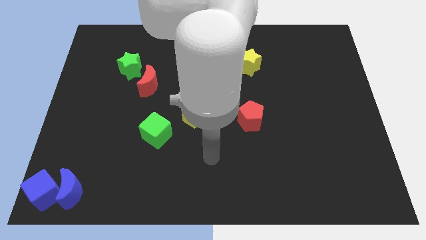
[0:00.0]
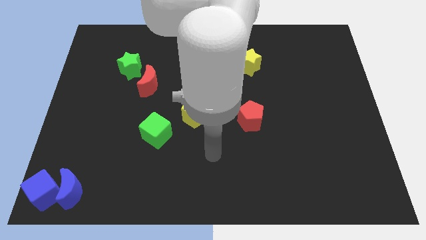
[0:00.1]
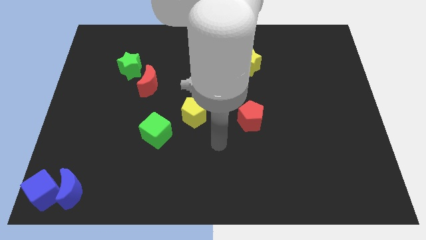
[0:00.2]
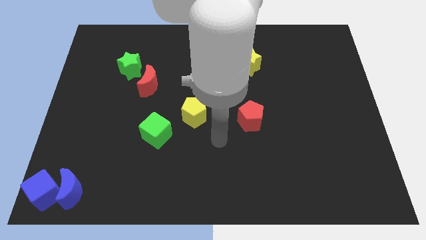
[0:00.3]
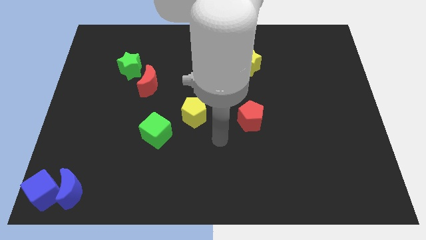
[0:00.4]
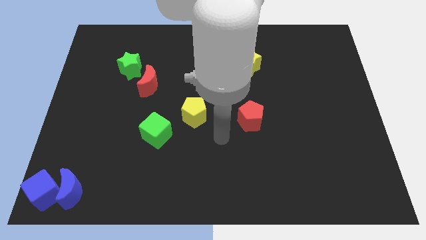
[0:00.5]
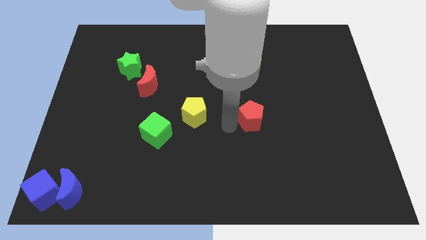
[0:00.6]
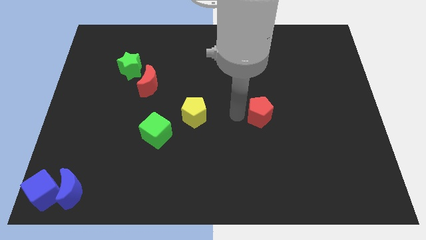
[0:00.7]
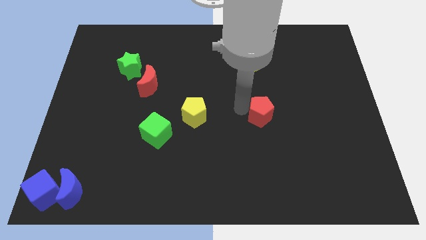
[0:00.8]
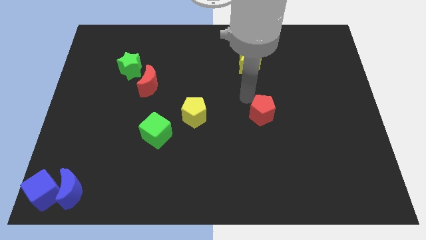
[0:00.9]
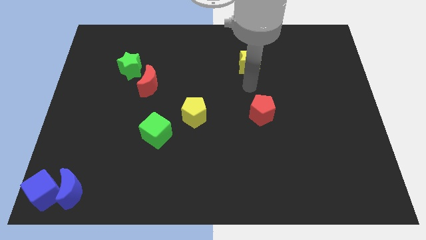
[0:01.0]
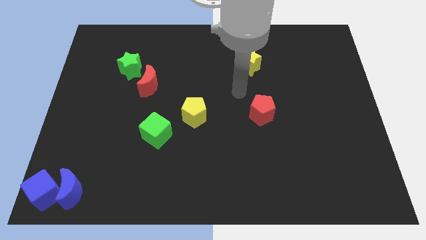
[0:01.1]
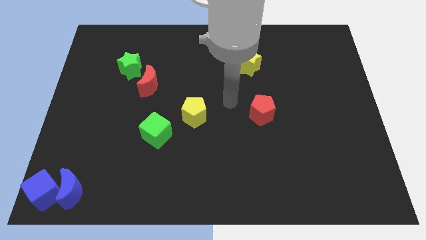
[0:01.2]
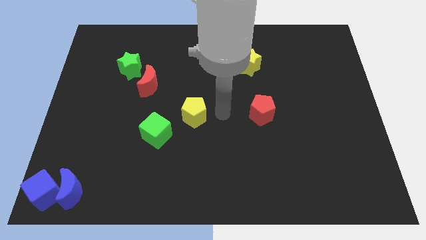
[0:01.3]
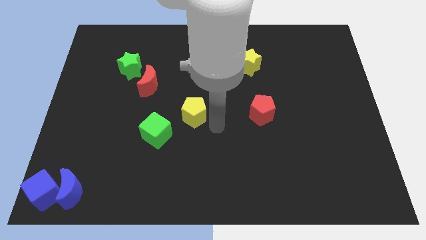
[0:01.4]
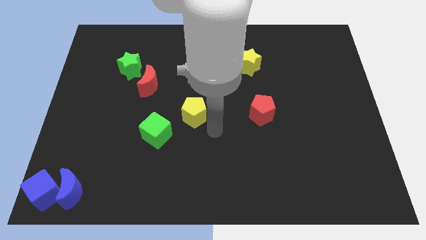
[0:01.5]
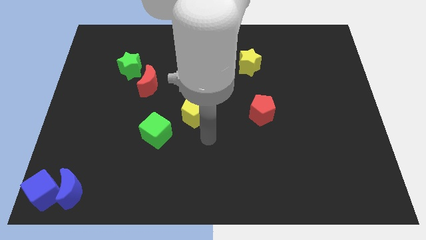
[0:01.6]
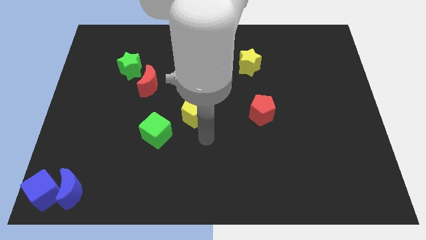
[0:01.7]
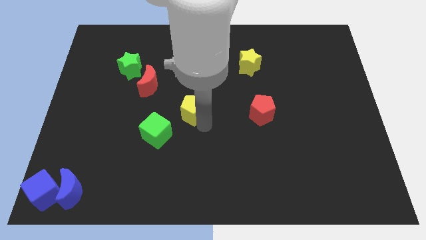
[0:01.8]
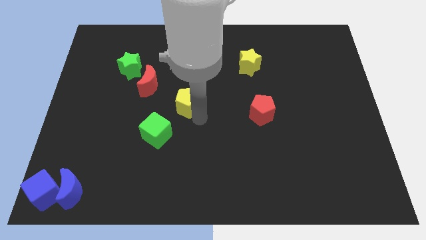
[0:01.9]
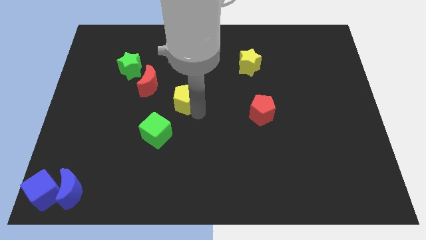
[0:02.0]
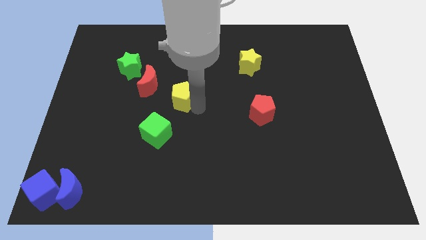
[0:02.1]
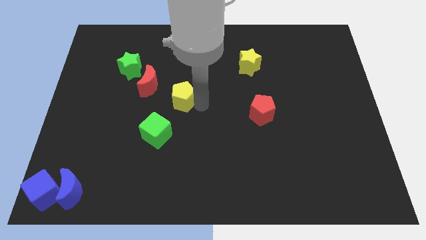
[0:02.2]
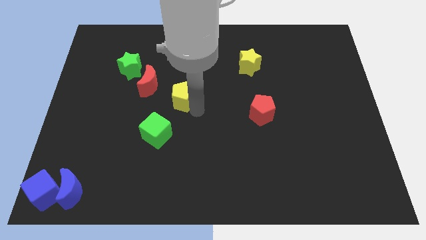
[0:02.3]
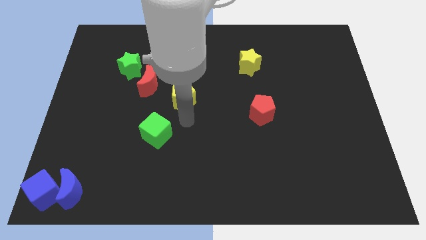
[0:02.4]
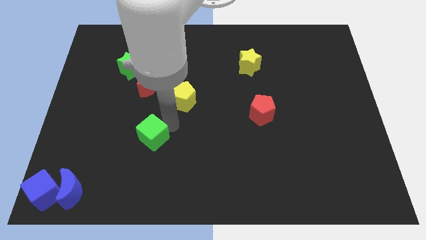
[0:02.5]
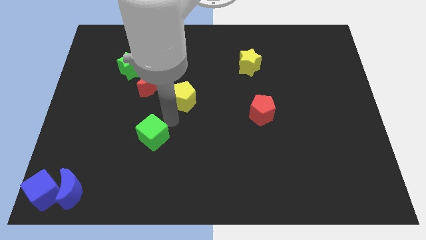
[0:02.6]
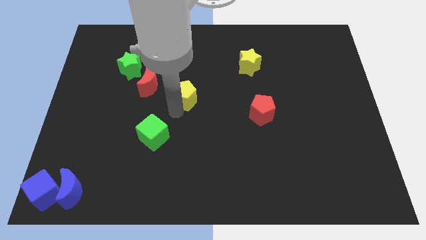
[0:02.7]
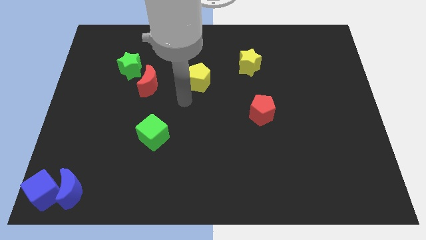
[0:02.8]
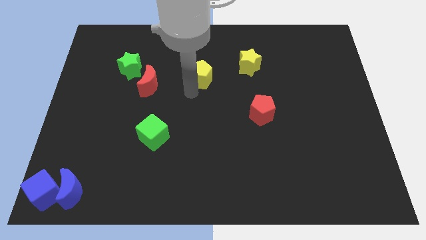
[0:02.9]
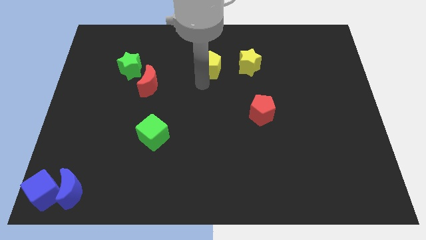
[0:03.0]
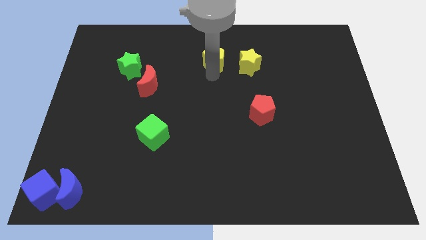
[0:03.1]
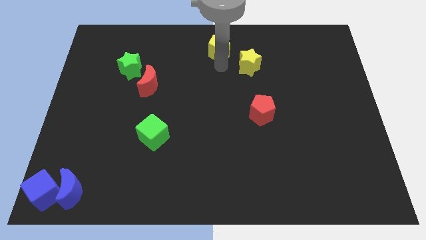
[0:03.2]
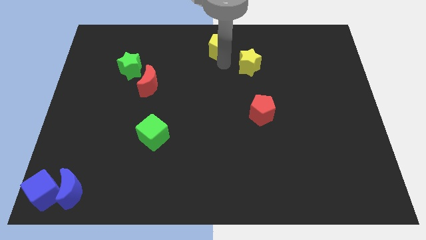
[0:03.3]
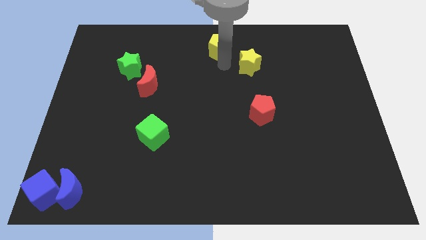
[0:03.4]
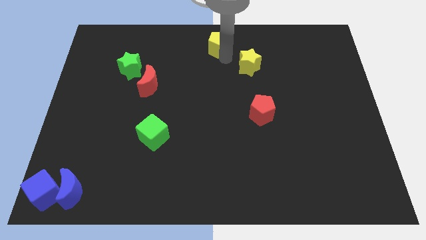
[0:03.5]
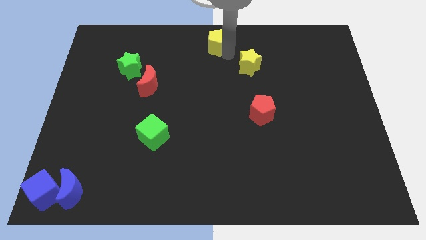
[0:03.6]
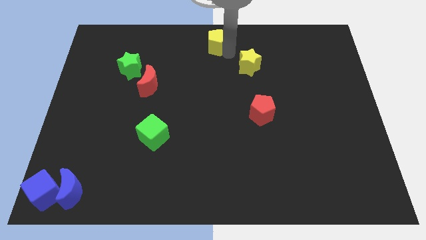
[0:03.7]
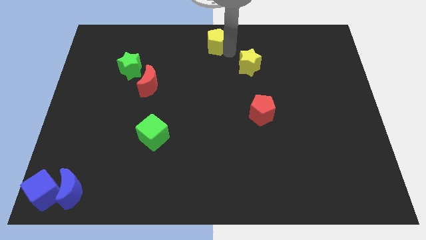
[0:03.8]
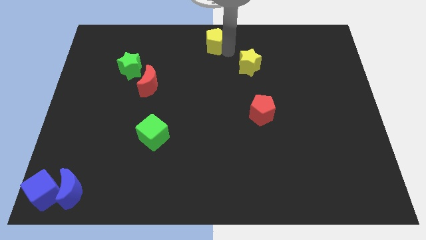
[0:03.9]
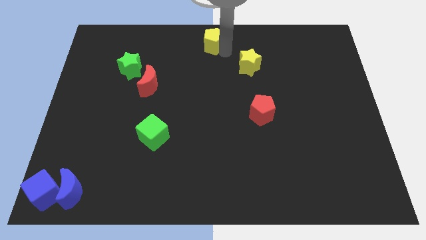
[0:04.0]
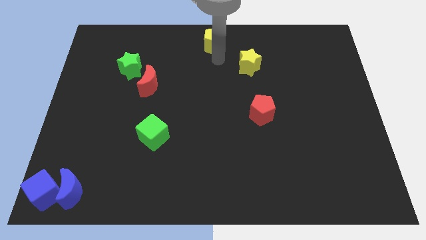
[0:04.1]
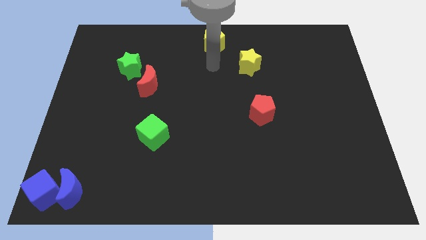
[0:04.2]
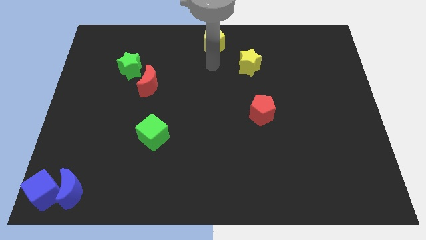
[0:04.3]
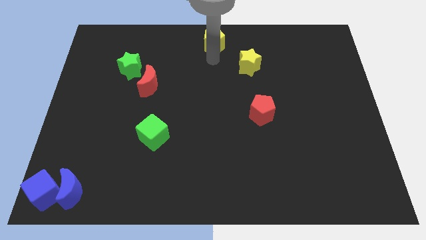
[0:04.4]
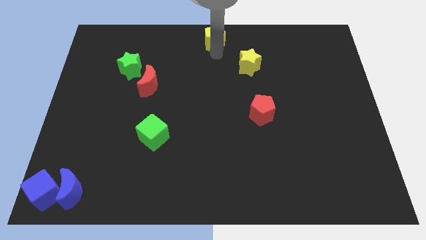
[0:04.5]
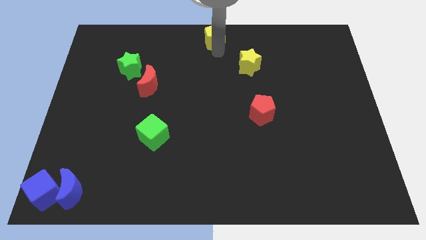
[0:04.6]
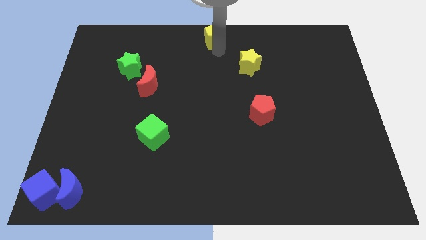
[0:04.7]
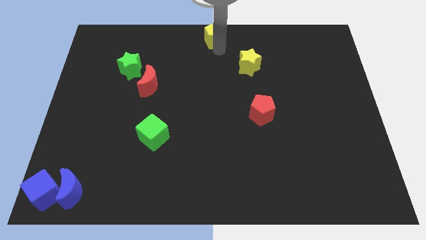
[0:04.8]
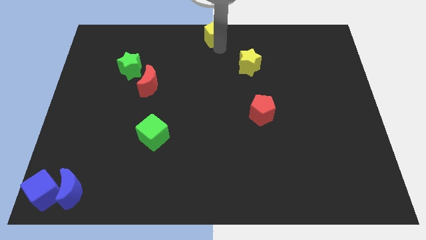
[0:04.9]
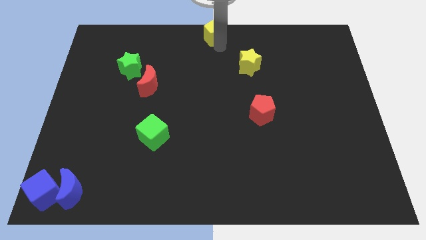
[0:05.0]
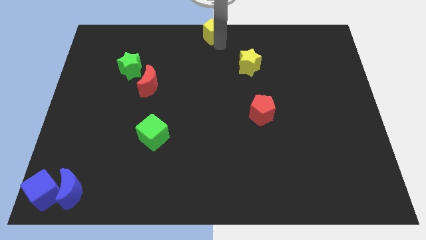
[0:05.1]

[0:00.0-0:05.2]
place the yellow pentagon at the top center of the board

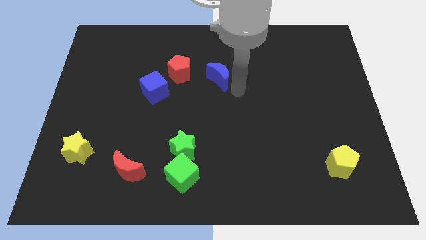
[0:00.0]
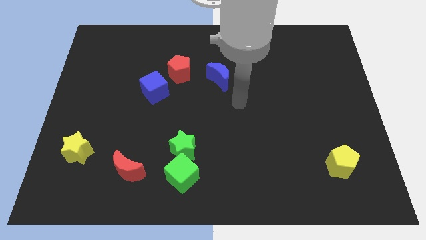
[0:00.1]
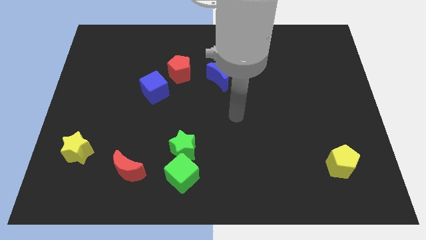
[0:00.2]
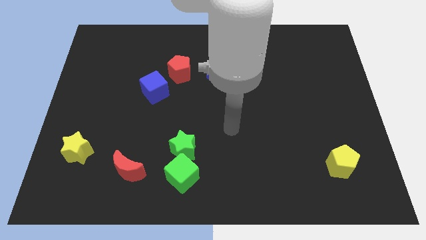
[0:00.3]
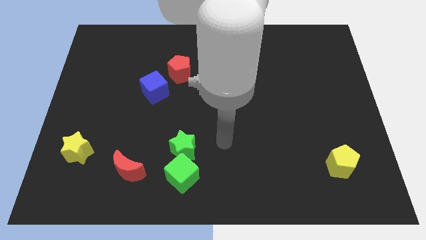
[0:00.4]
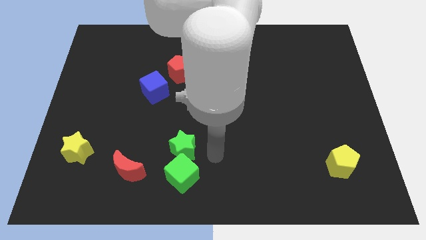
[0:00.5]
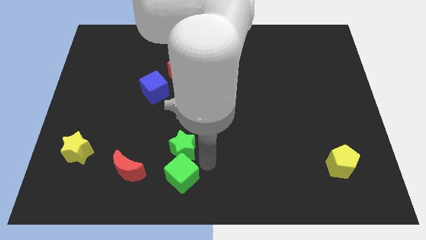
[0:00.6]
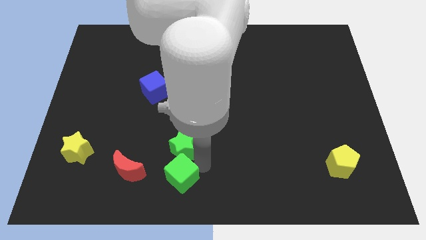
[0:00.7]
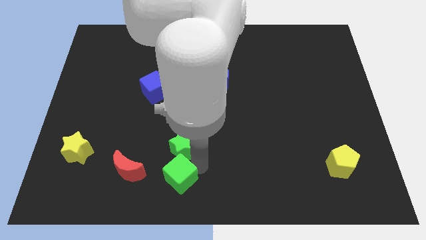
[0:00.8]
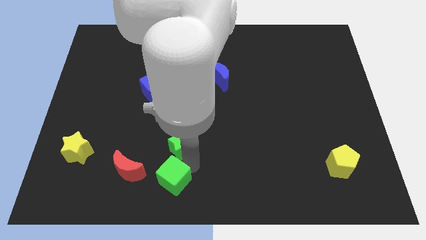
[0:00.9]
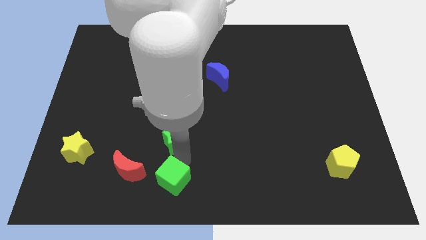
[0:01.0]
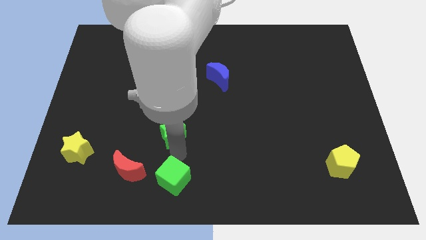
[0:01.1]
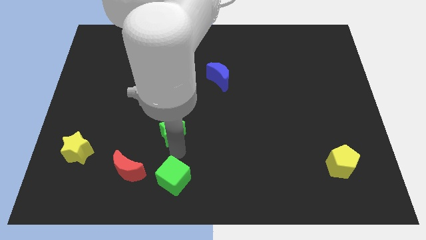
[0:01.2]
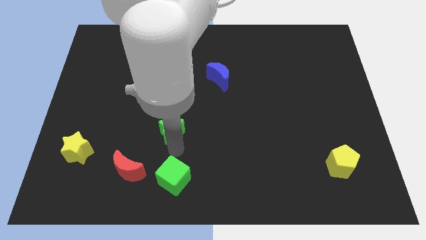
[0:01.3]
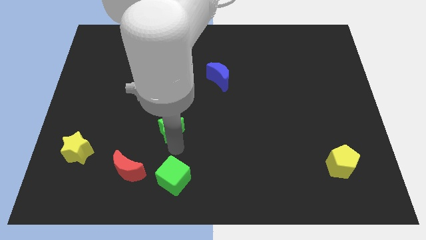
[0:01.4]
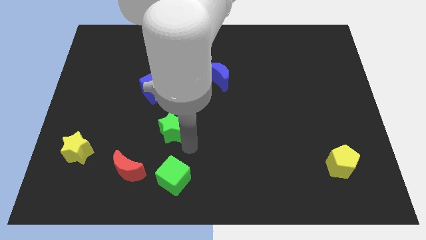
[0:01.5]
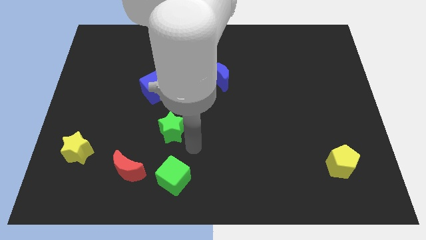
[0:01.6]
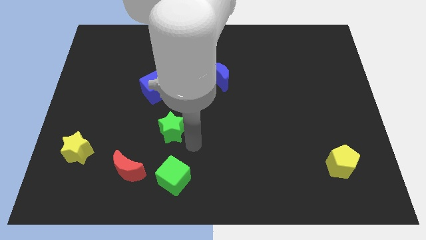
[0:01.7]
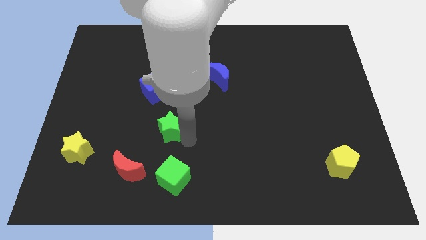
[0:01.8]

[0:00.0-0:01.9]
separate green star from the green cube

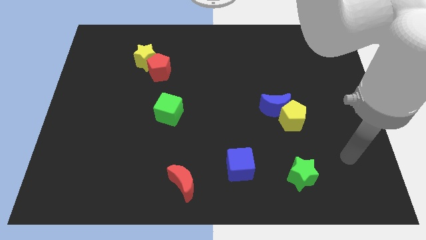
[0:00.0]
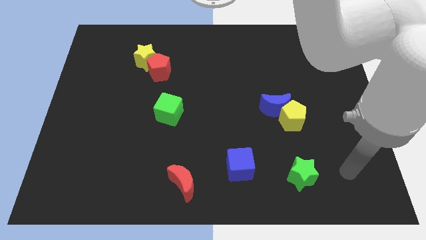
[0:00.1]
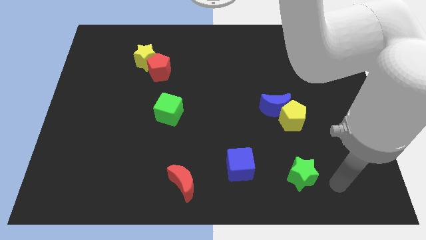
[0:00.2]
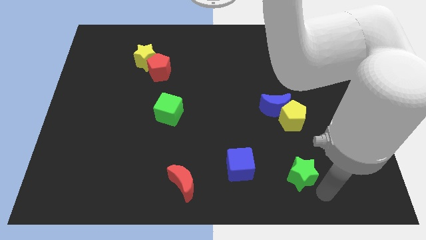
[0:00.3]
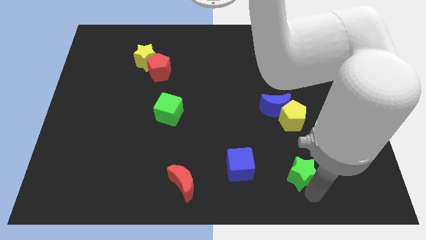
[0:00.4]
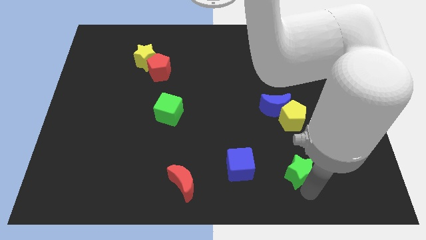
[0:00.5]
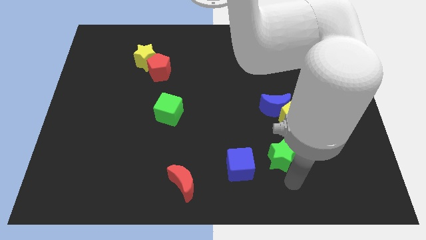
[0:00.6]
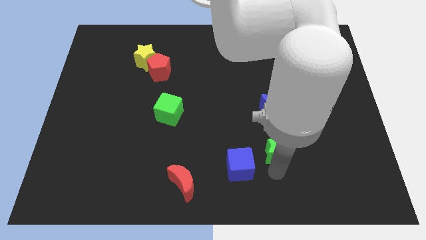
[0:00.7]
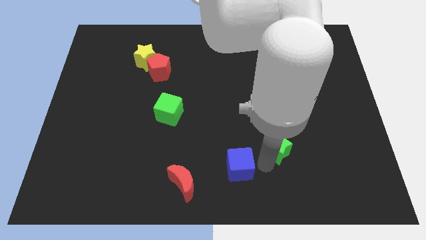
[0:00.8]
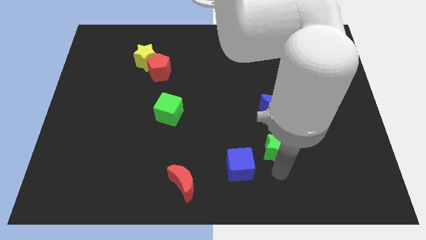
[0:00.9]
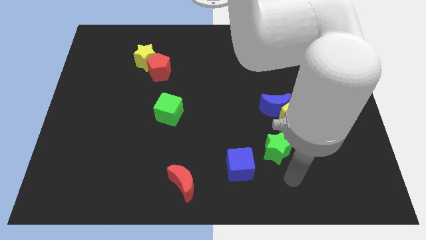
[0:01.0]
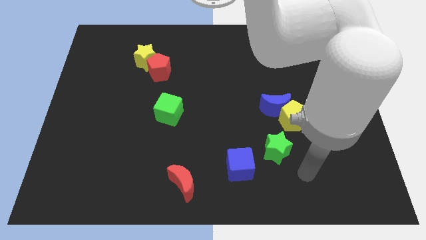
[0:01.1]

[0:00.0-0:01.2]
slide the green star diagonally top right to the blue cube

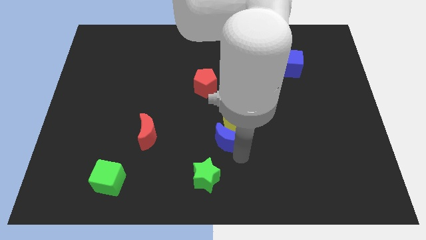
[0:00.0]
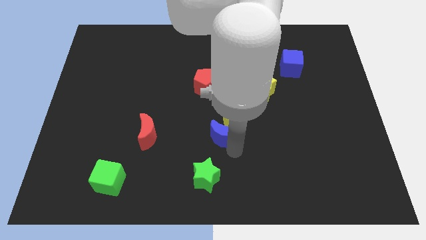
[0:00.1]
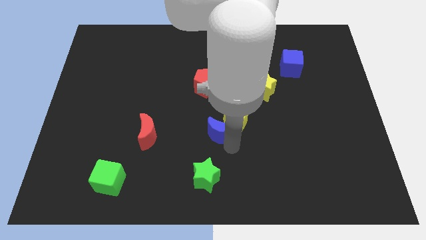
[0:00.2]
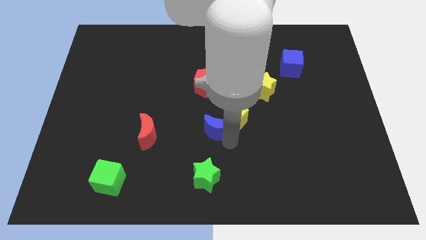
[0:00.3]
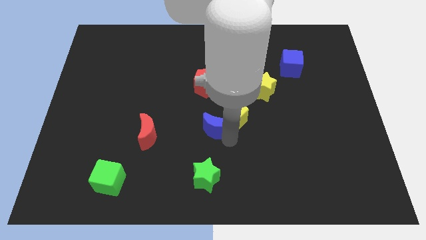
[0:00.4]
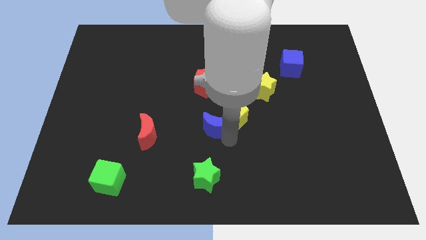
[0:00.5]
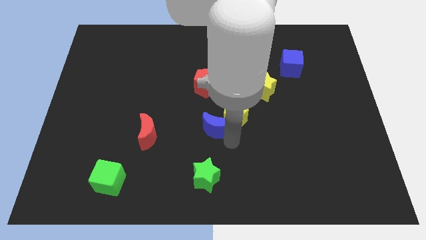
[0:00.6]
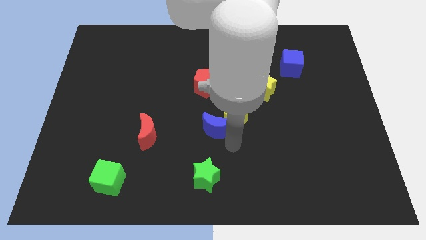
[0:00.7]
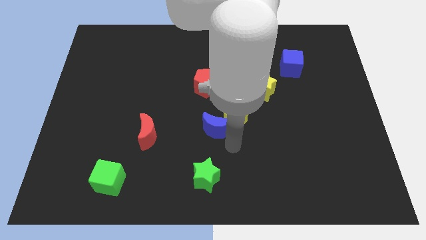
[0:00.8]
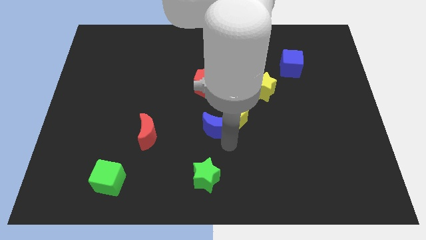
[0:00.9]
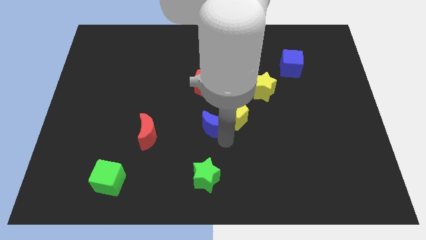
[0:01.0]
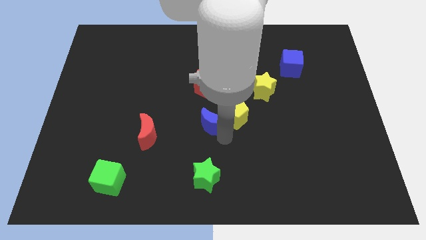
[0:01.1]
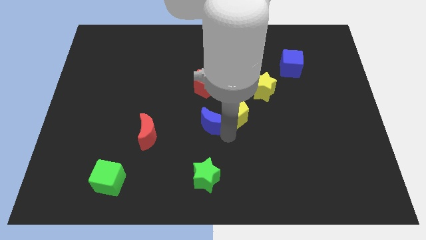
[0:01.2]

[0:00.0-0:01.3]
push blue crescent in to yellow pentagon
